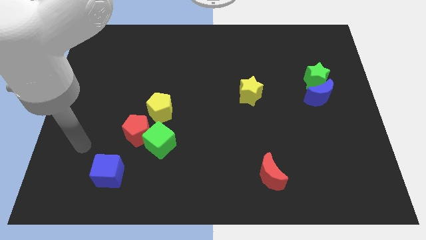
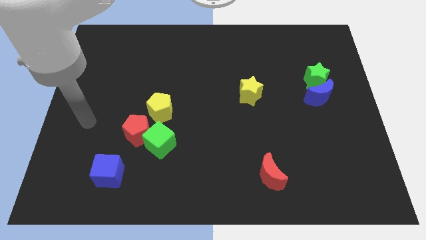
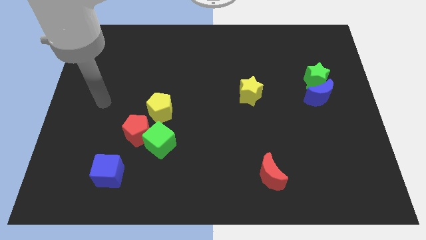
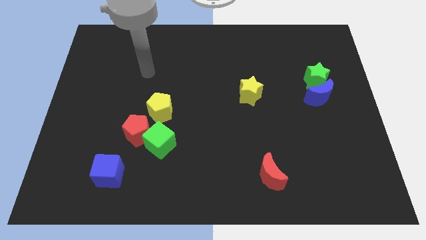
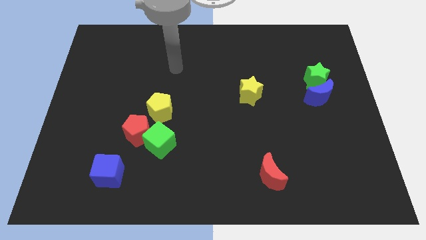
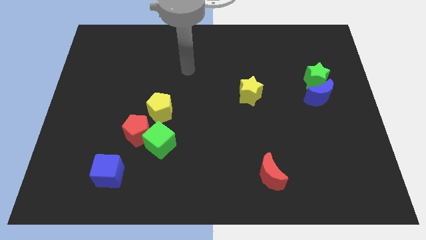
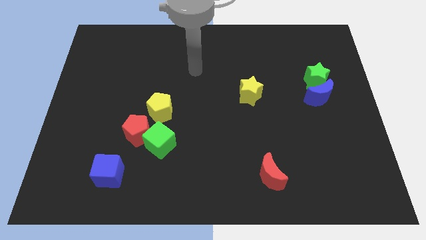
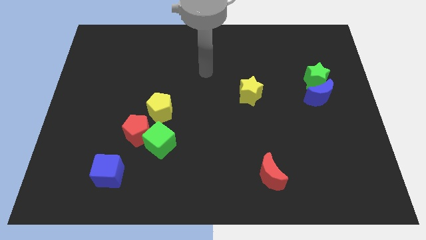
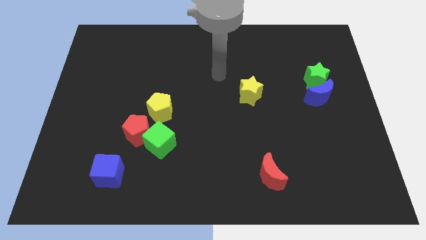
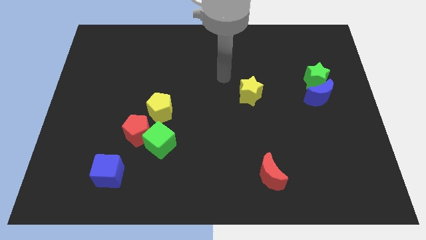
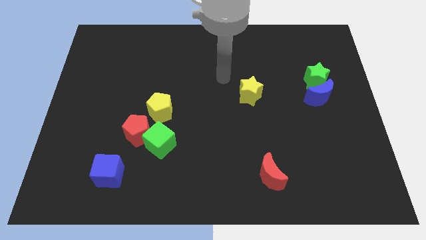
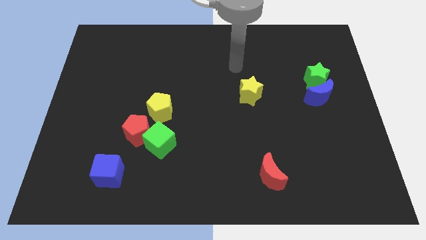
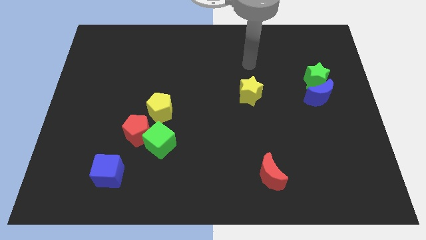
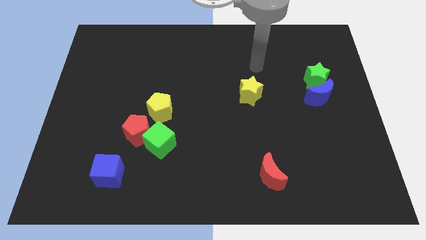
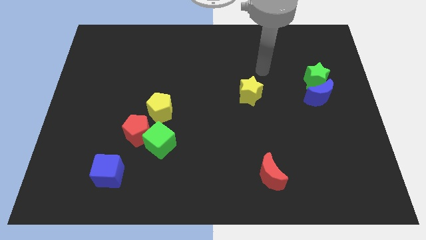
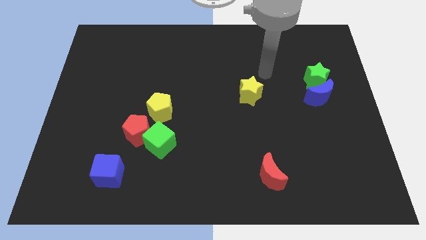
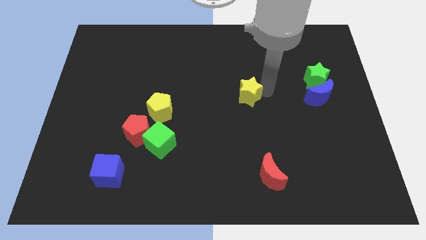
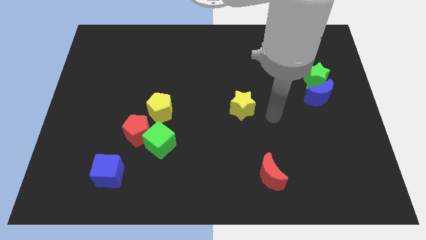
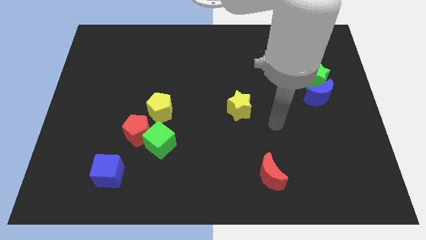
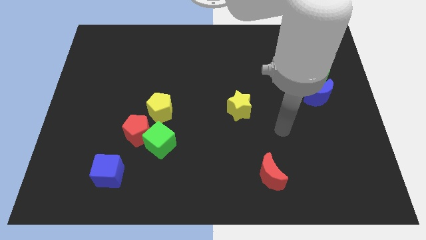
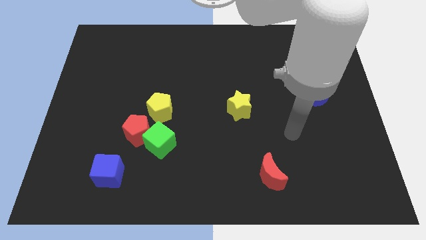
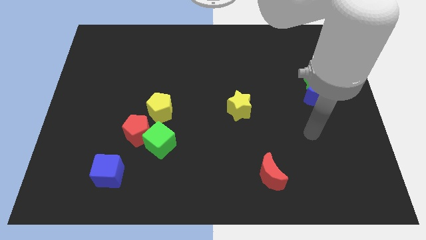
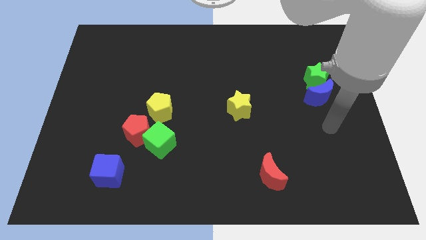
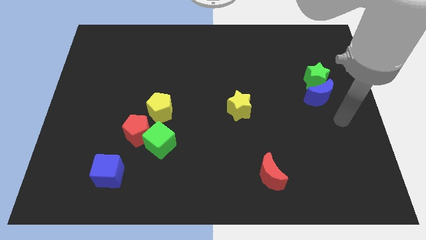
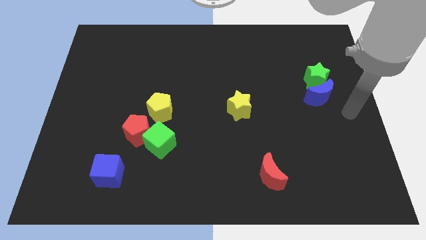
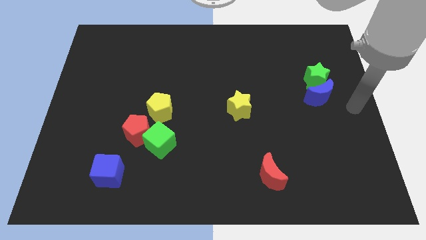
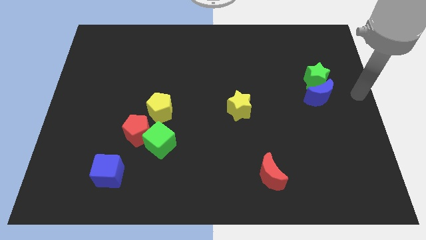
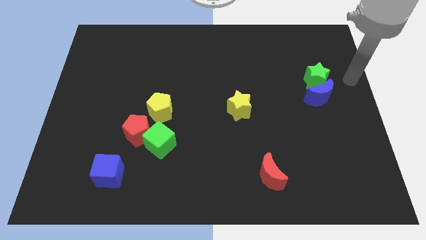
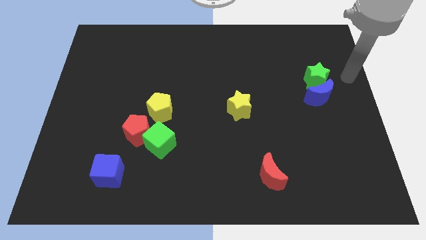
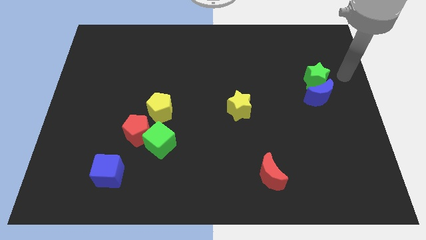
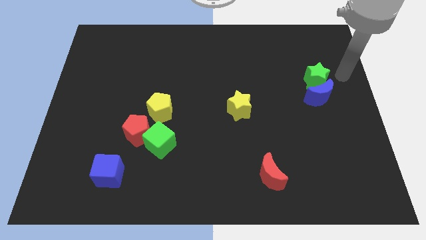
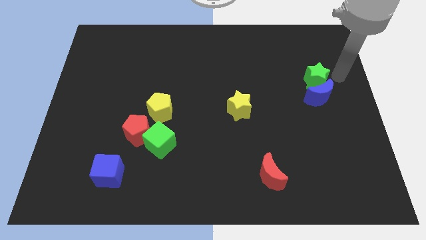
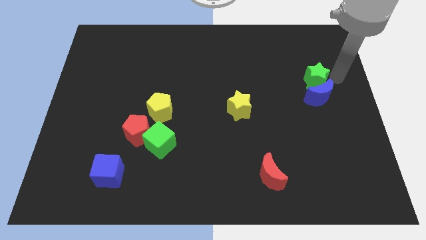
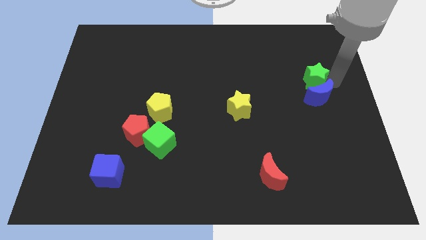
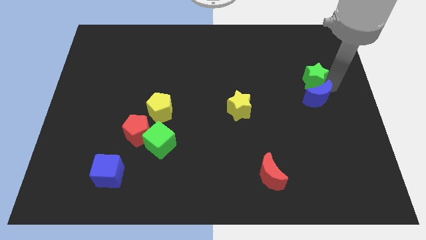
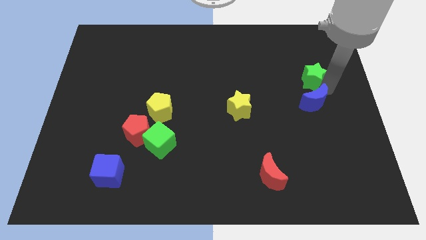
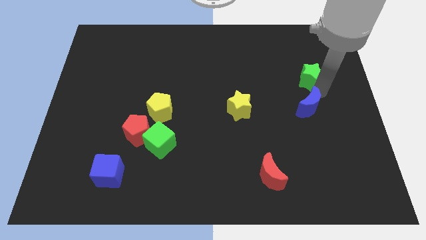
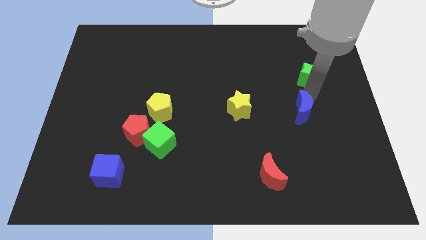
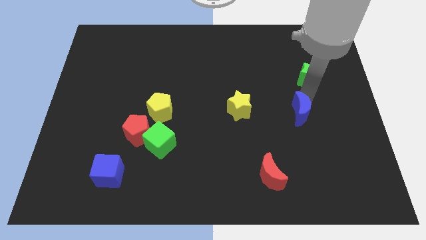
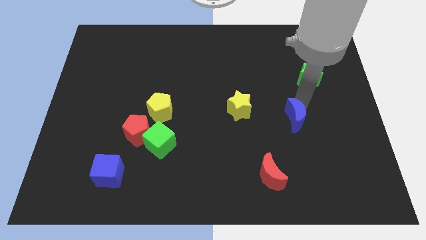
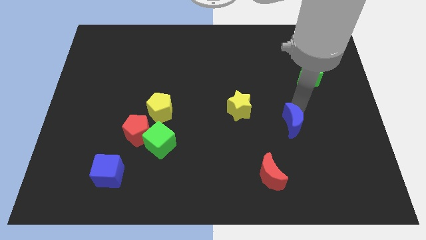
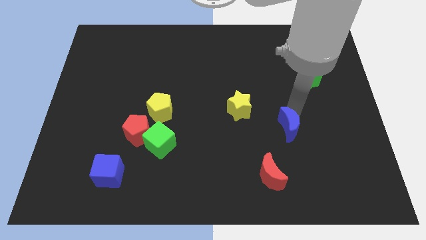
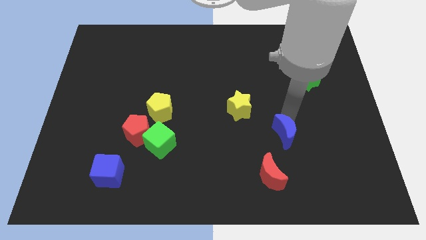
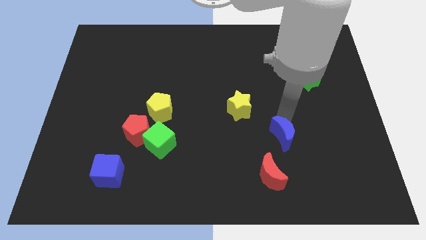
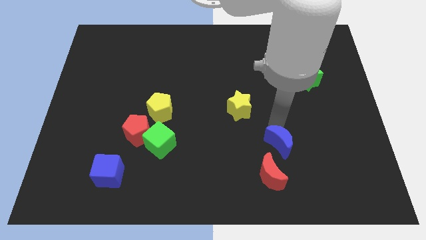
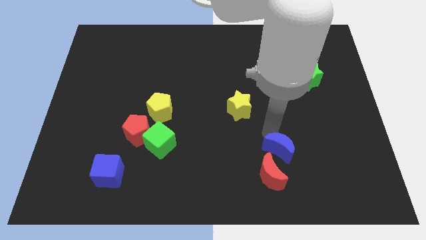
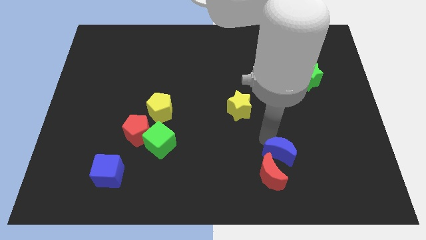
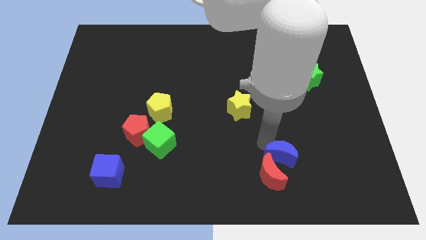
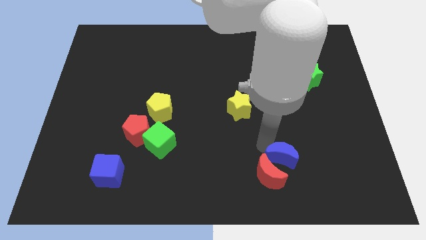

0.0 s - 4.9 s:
move the blue moon close to the red moon

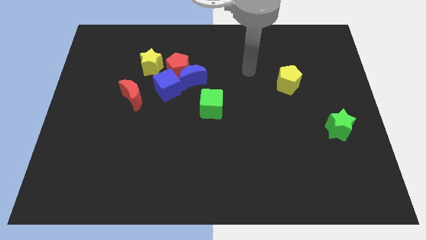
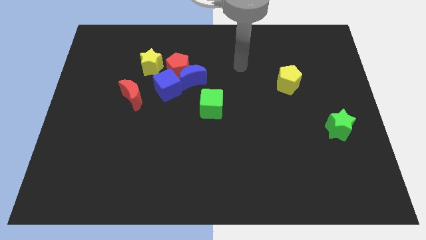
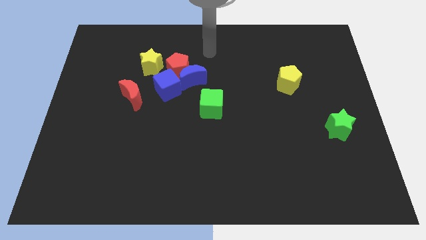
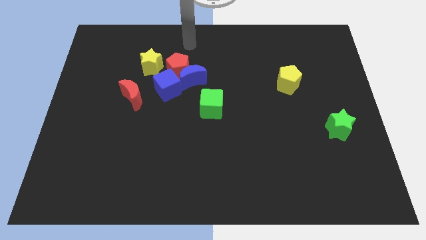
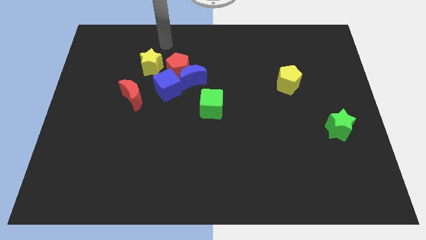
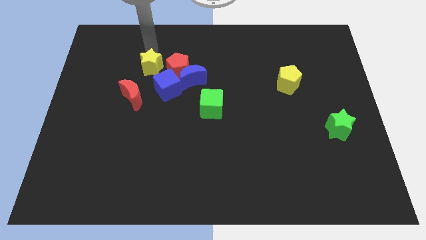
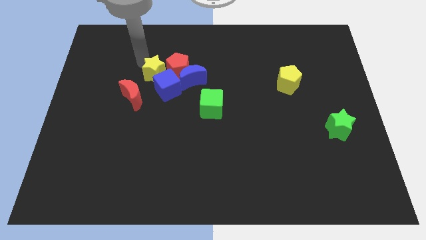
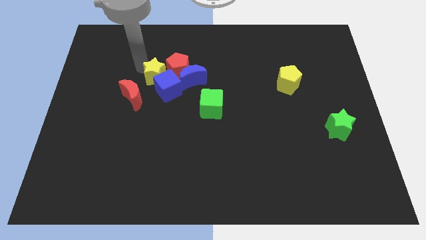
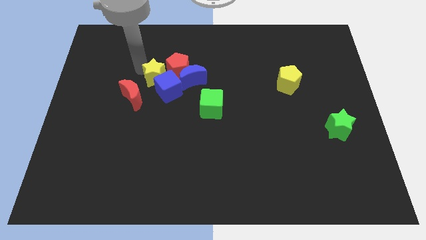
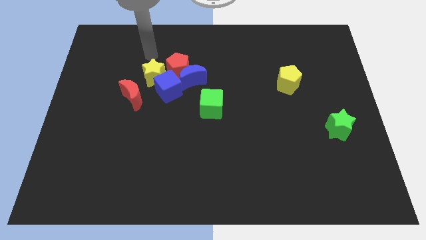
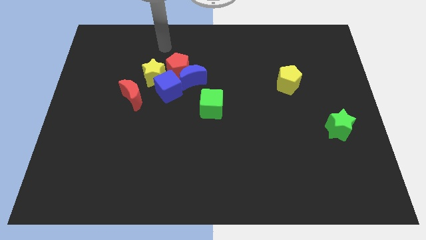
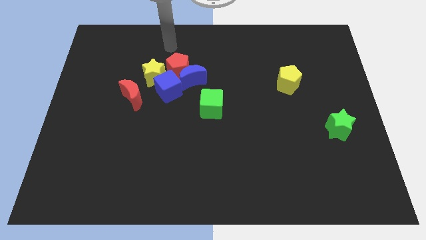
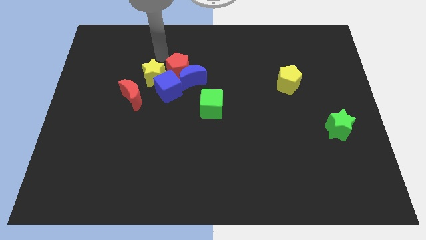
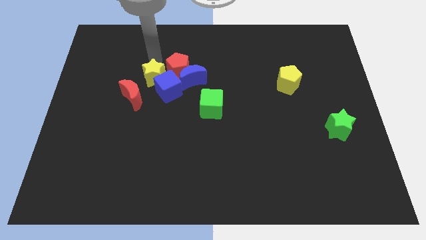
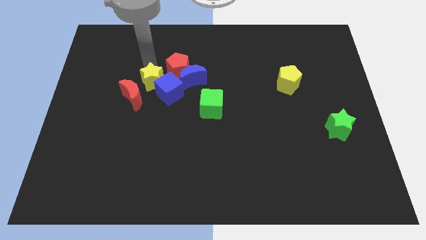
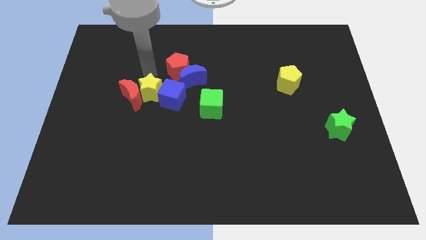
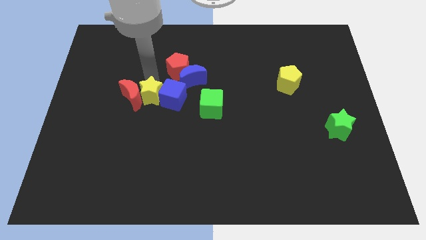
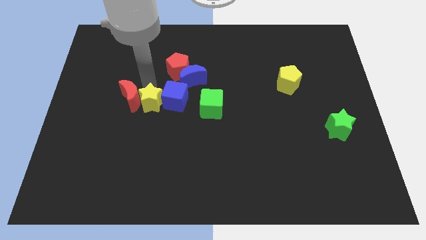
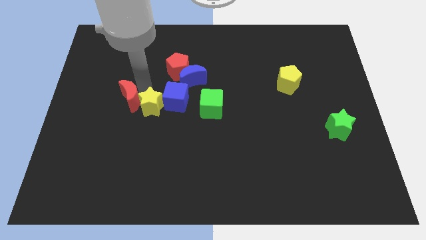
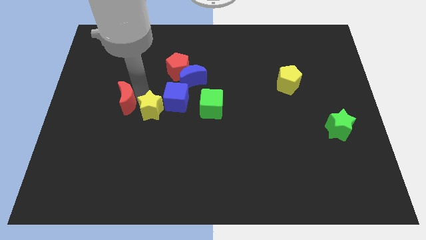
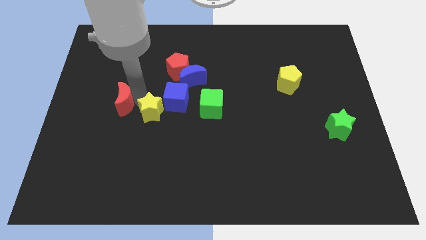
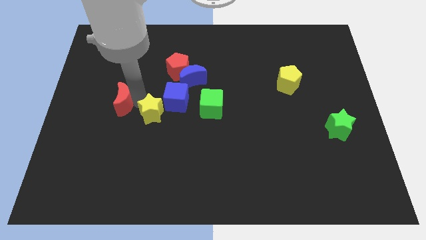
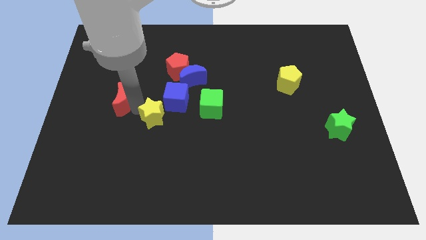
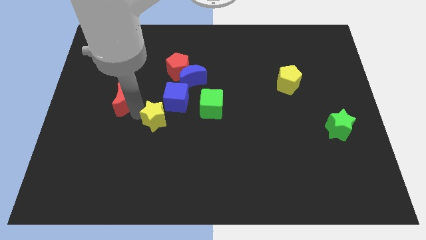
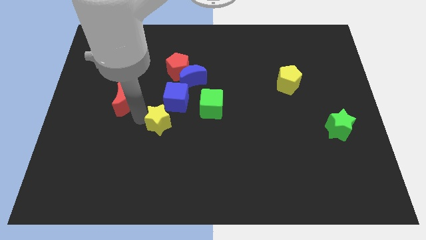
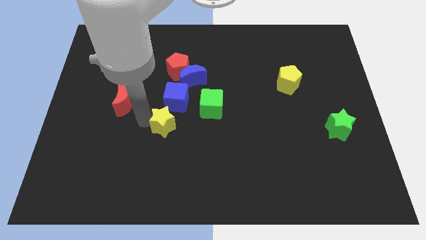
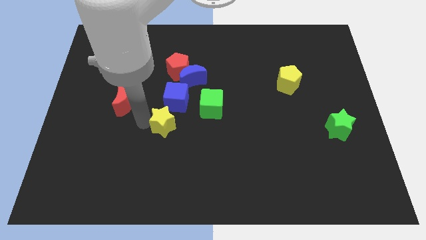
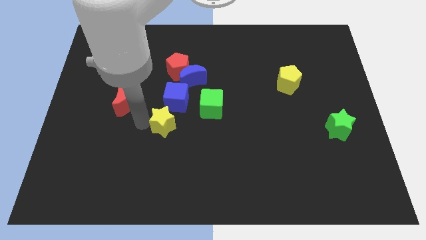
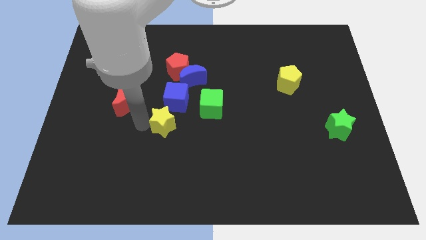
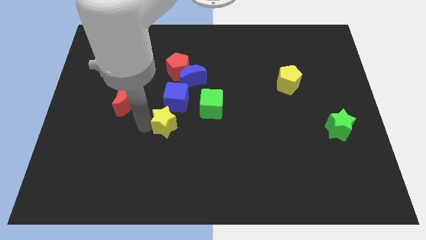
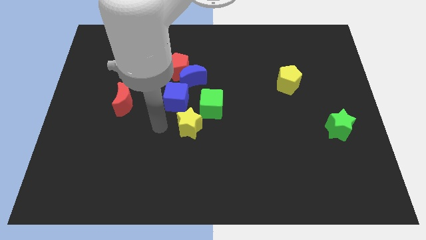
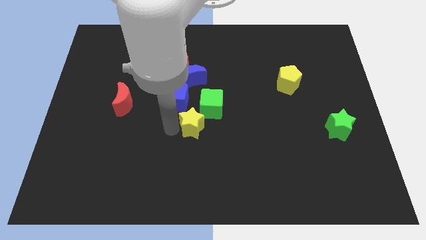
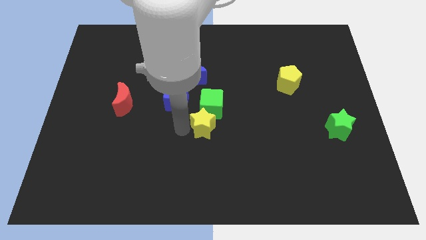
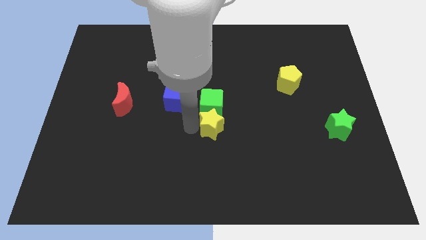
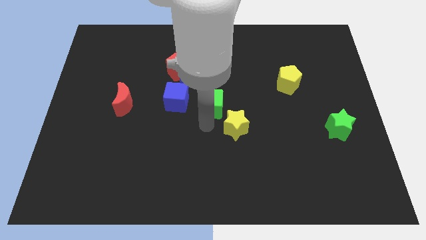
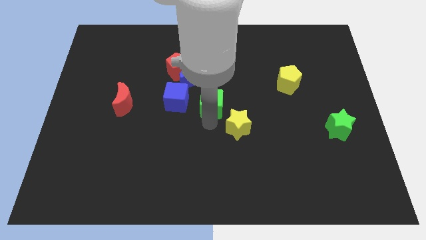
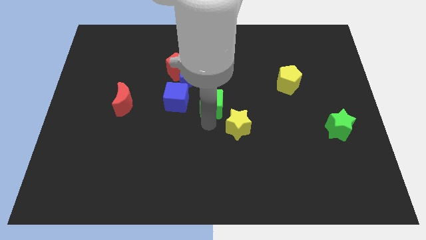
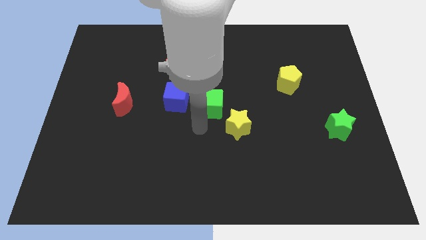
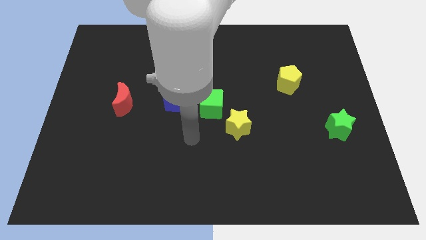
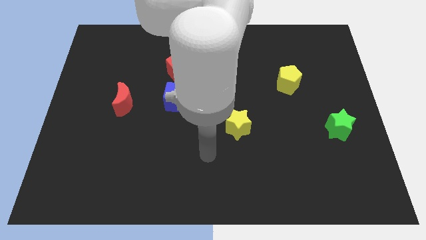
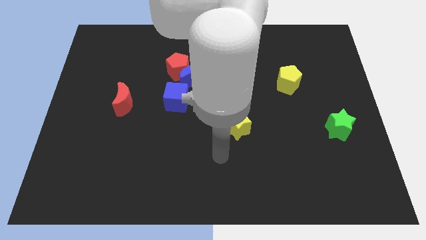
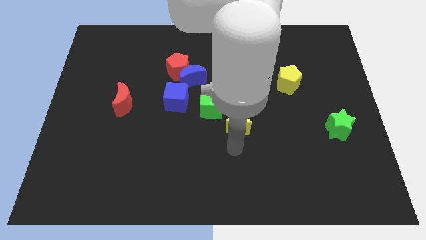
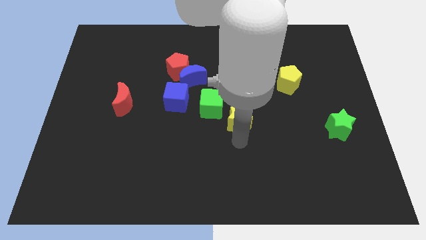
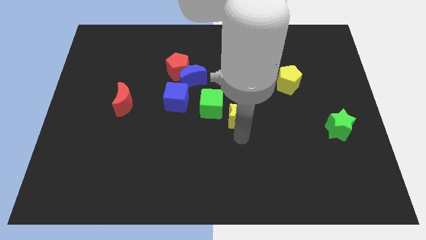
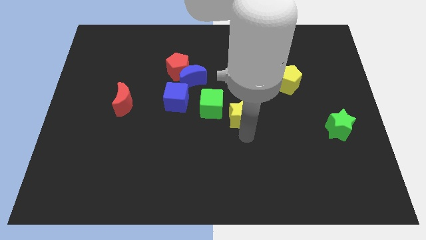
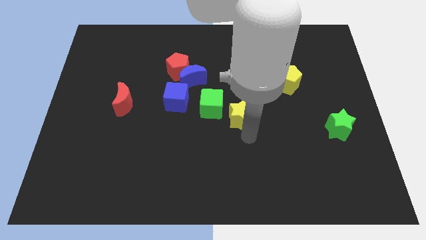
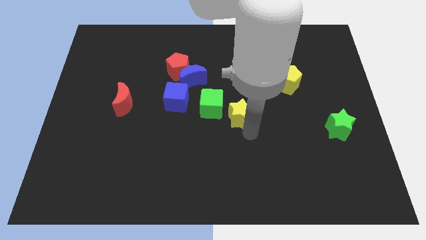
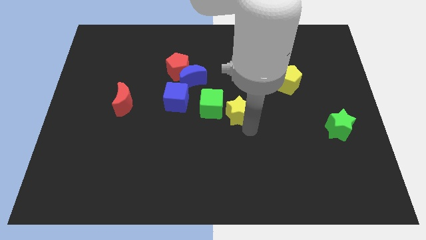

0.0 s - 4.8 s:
push the yellow star next to the green cube
